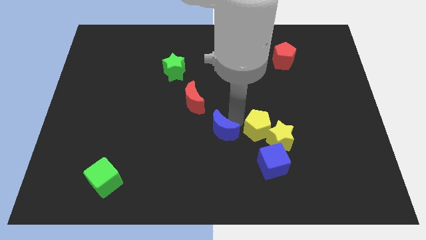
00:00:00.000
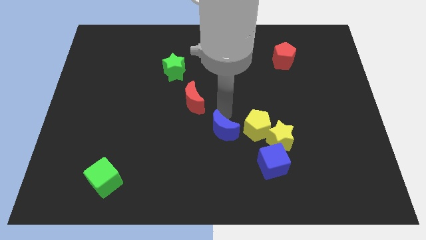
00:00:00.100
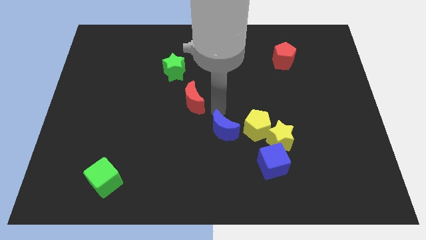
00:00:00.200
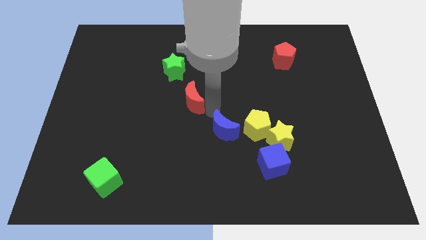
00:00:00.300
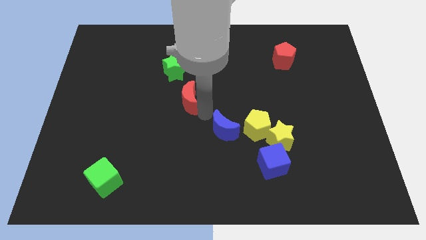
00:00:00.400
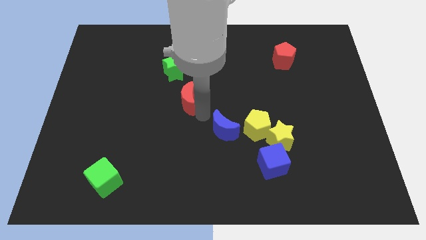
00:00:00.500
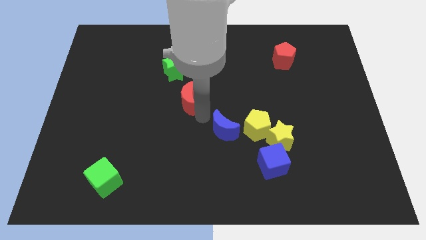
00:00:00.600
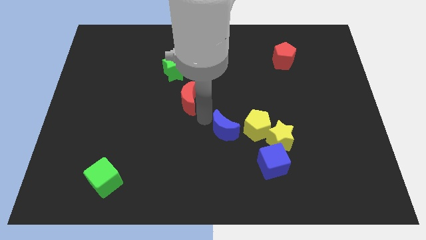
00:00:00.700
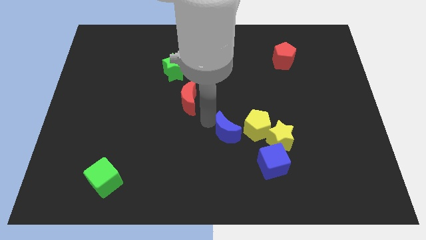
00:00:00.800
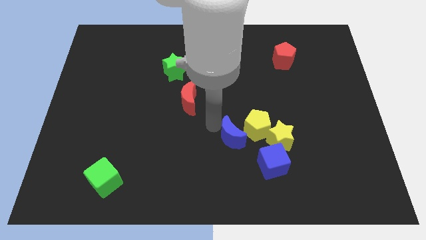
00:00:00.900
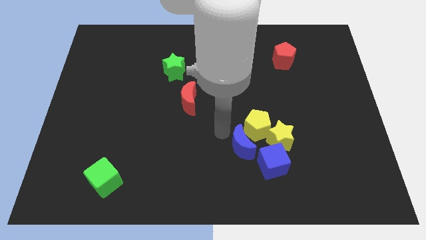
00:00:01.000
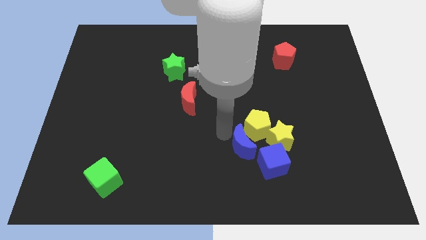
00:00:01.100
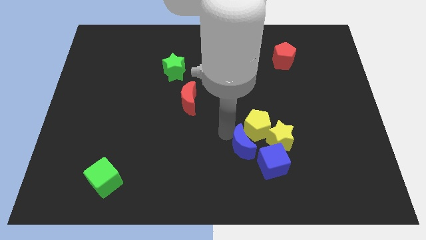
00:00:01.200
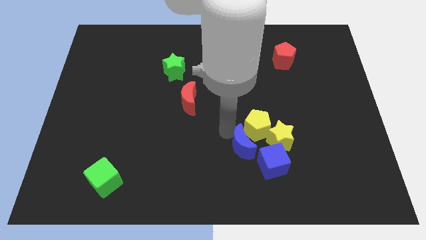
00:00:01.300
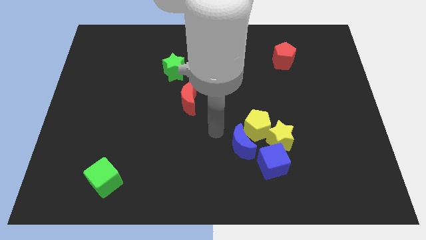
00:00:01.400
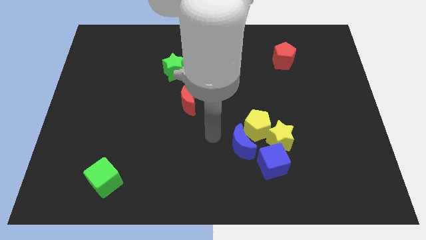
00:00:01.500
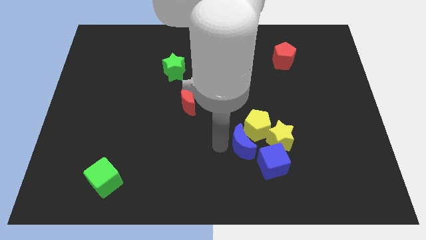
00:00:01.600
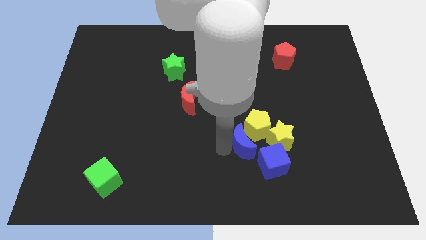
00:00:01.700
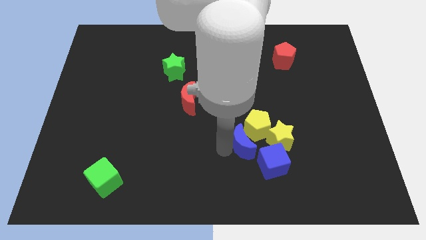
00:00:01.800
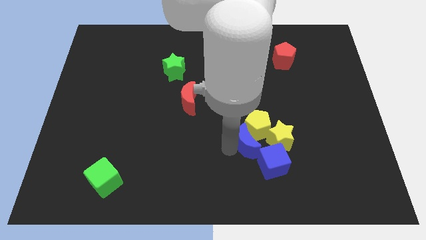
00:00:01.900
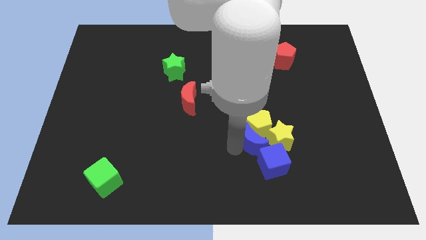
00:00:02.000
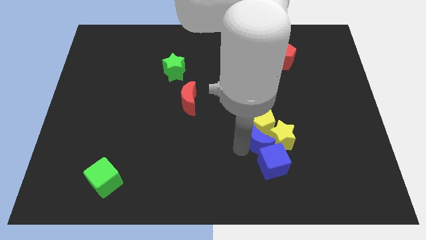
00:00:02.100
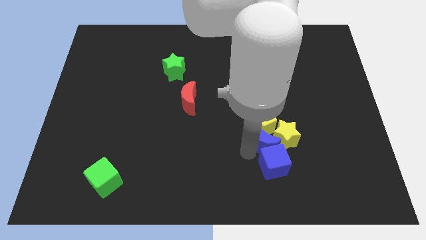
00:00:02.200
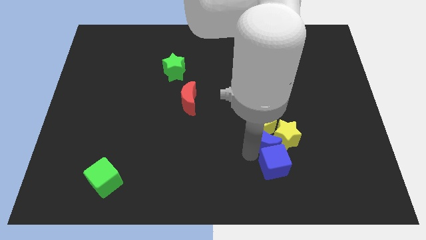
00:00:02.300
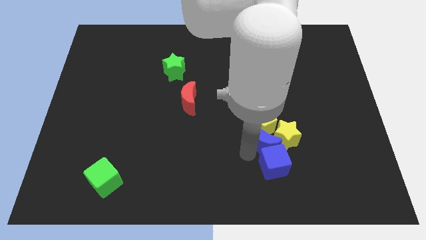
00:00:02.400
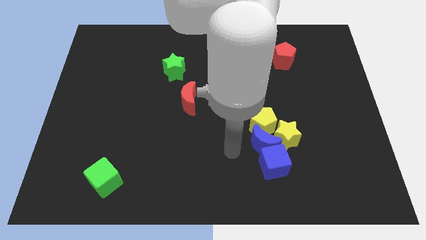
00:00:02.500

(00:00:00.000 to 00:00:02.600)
push the blue crescent to the top of the blue cube

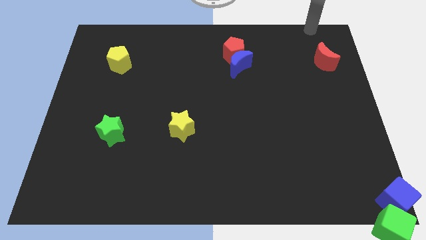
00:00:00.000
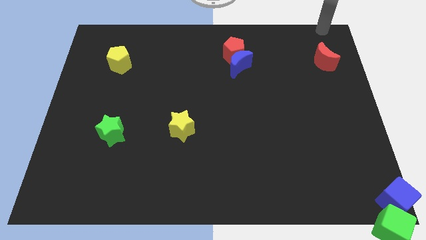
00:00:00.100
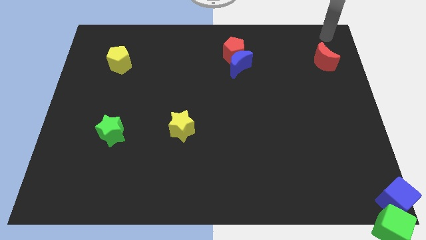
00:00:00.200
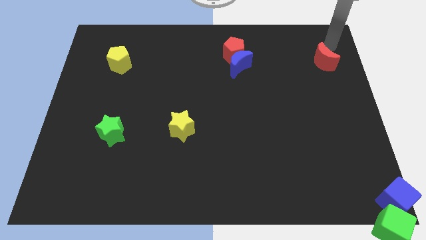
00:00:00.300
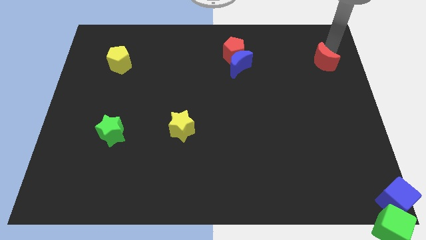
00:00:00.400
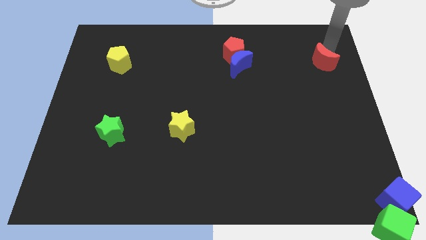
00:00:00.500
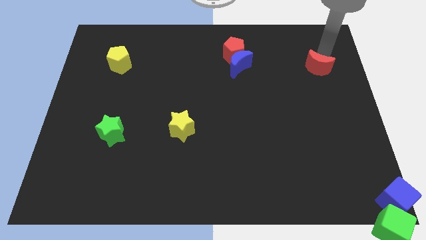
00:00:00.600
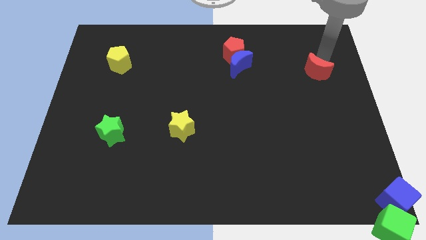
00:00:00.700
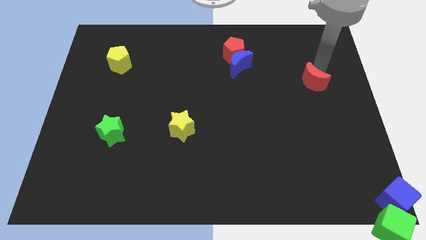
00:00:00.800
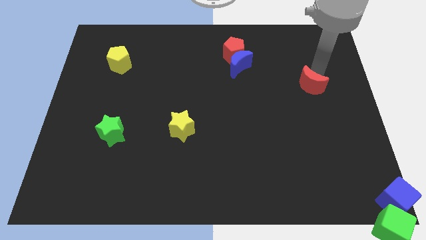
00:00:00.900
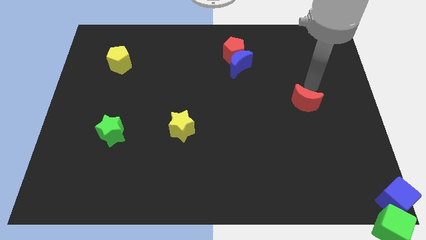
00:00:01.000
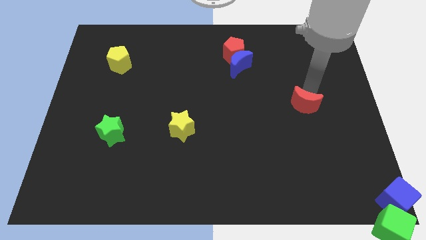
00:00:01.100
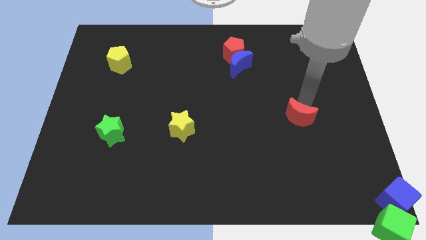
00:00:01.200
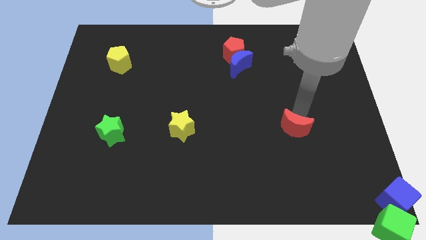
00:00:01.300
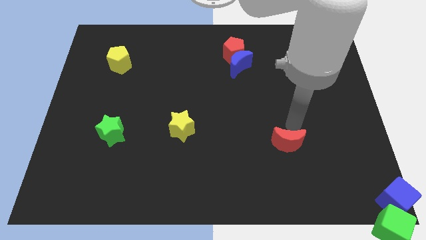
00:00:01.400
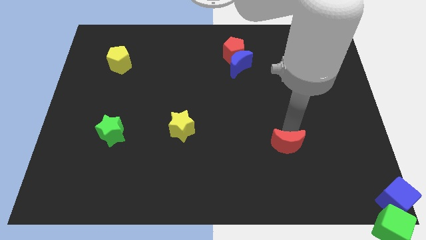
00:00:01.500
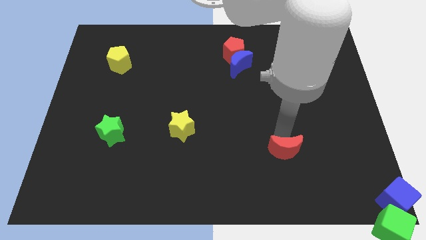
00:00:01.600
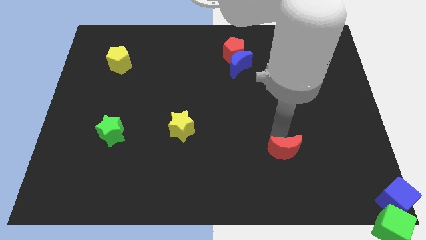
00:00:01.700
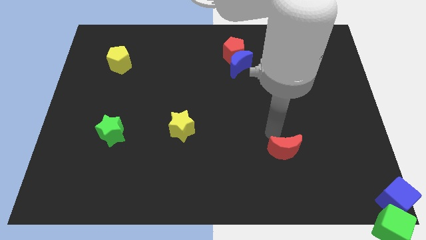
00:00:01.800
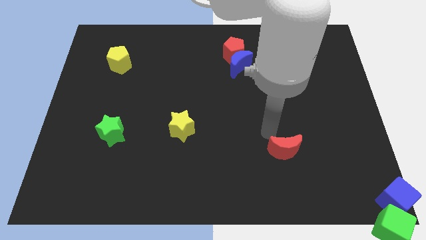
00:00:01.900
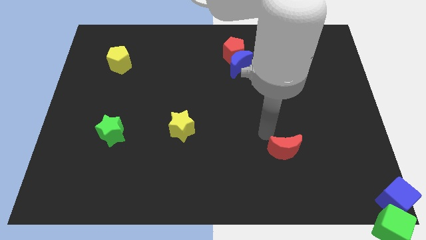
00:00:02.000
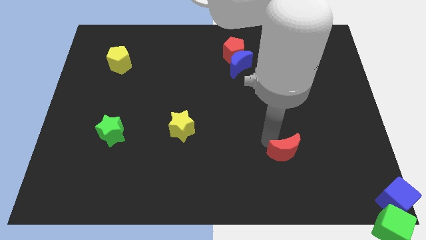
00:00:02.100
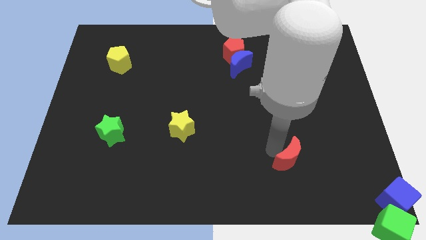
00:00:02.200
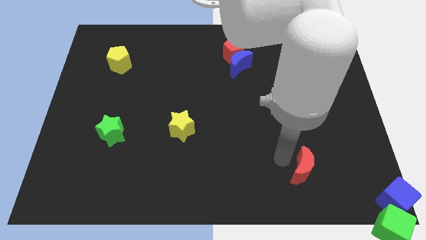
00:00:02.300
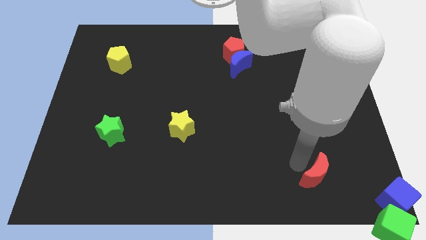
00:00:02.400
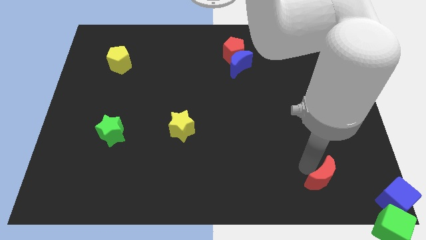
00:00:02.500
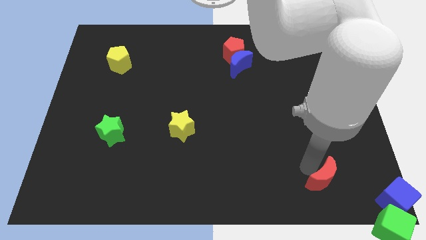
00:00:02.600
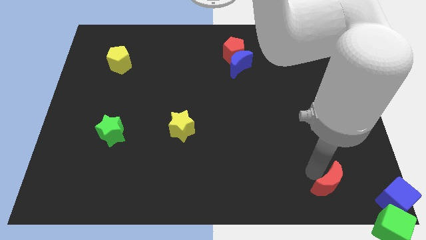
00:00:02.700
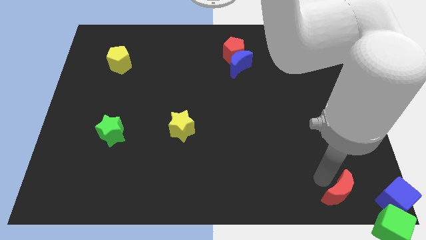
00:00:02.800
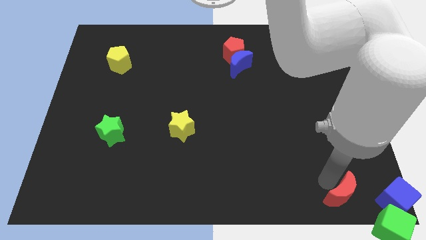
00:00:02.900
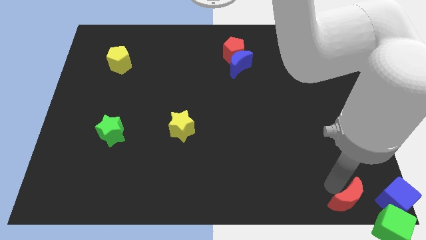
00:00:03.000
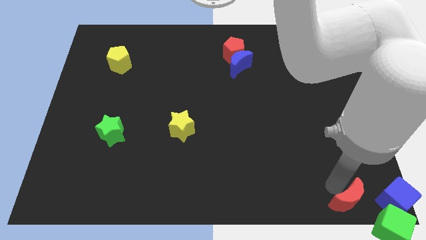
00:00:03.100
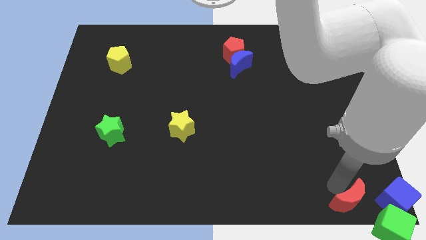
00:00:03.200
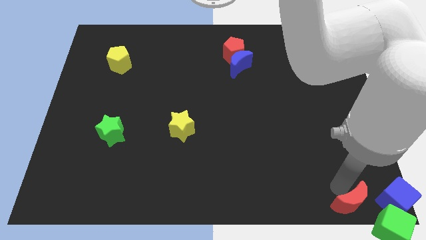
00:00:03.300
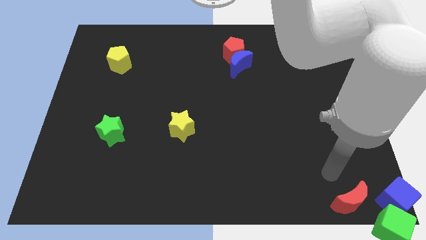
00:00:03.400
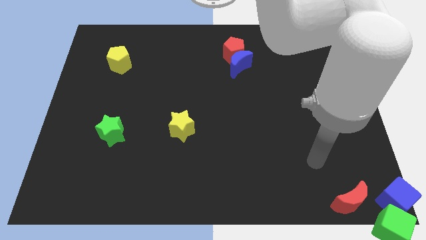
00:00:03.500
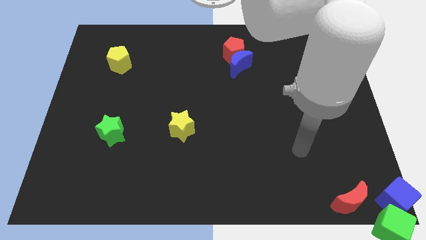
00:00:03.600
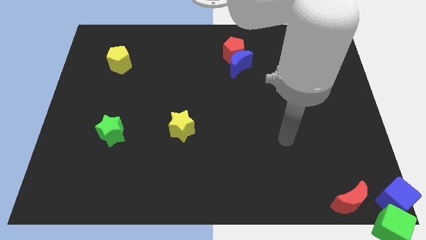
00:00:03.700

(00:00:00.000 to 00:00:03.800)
move the red moon to the bottom right corner

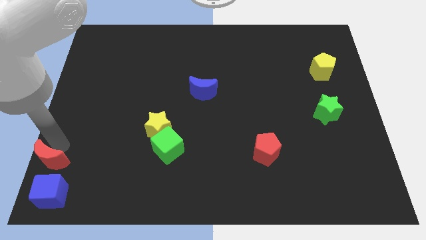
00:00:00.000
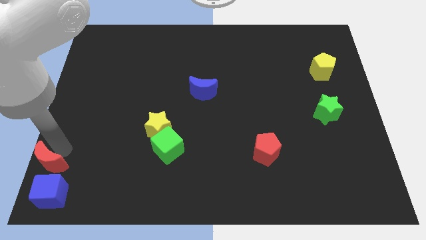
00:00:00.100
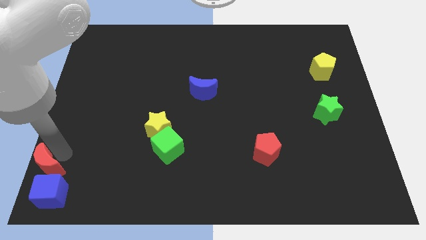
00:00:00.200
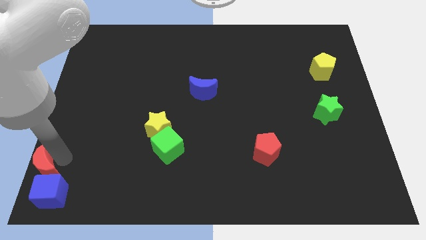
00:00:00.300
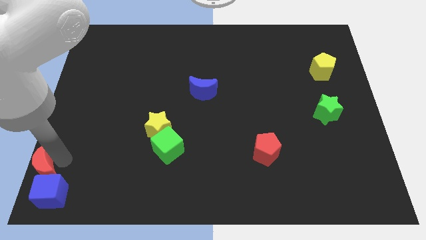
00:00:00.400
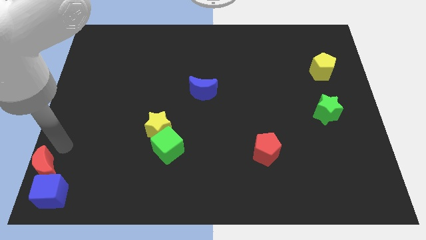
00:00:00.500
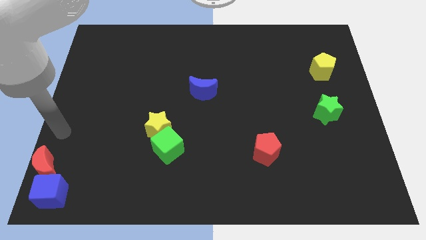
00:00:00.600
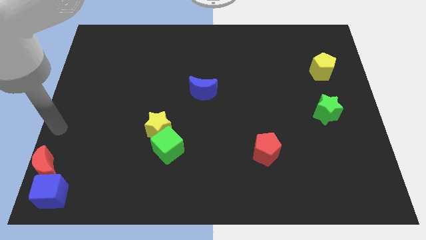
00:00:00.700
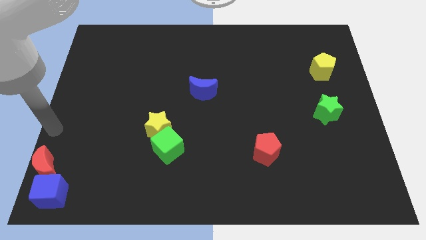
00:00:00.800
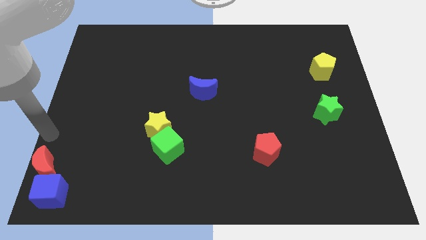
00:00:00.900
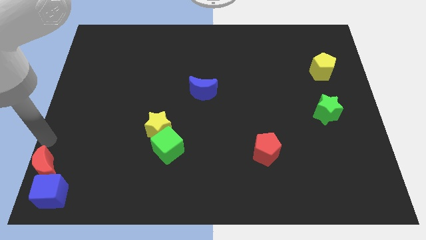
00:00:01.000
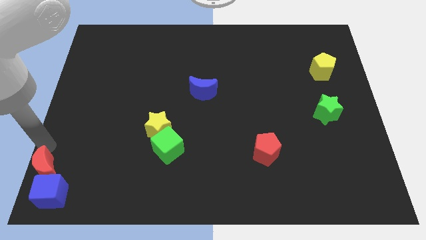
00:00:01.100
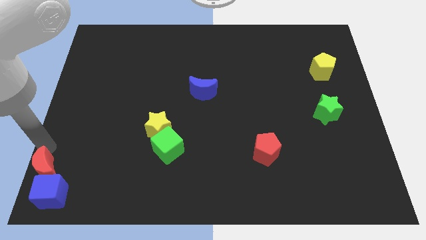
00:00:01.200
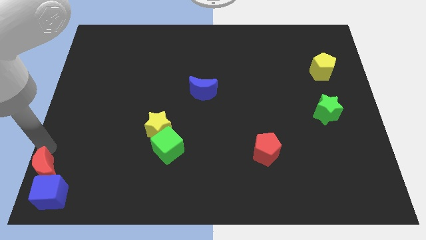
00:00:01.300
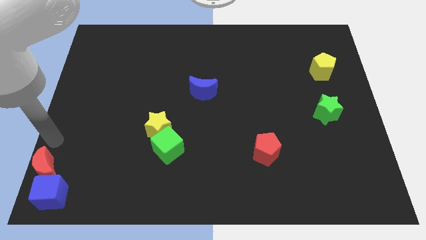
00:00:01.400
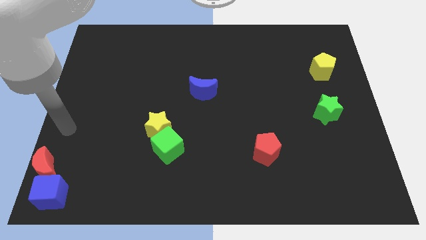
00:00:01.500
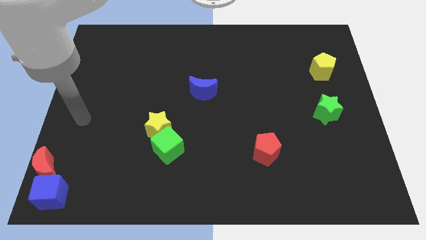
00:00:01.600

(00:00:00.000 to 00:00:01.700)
push the red crescent into the blue moon

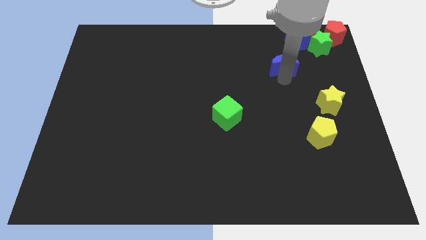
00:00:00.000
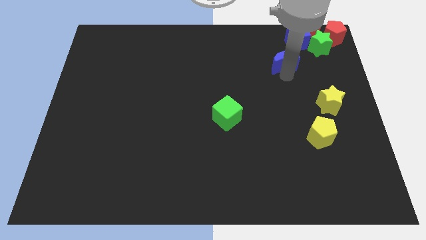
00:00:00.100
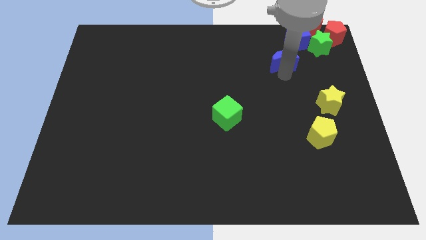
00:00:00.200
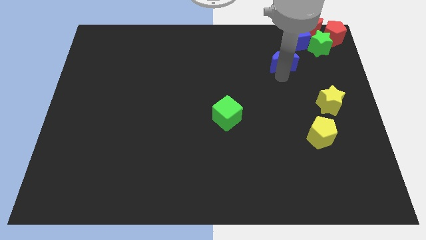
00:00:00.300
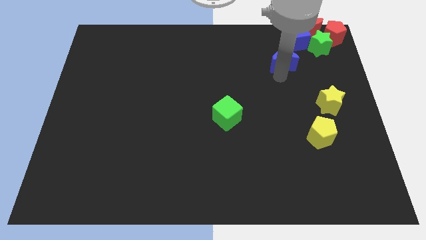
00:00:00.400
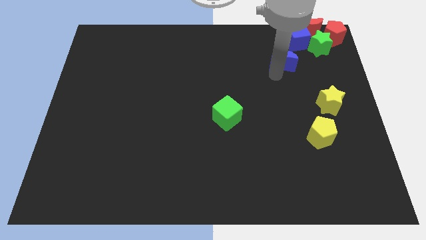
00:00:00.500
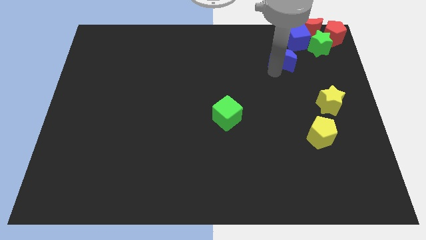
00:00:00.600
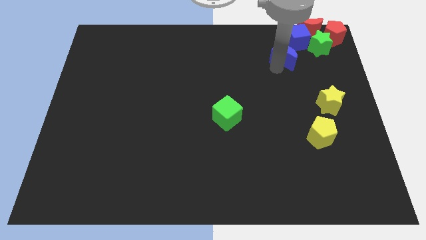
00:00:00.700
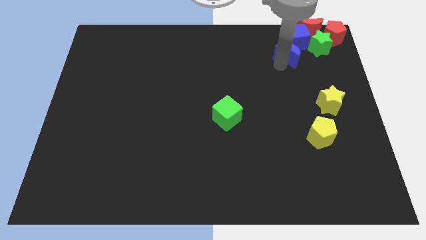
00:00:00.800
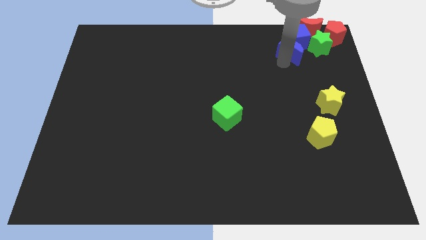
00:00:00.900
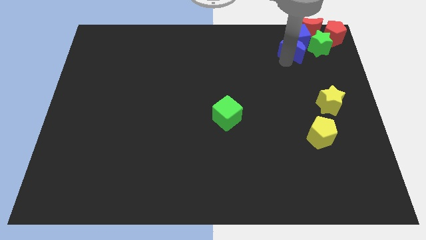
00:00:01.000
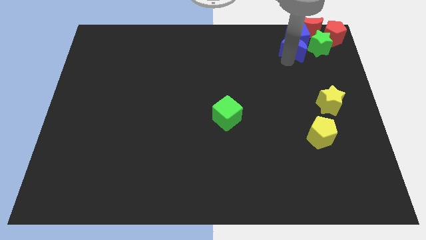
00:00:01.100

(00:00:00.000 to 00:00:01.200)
move the blue crescent into the blue cube
